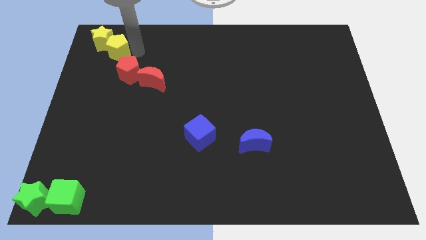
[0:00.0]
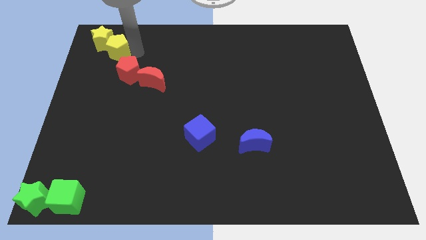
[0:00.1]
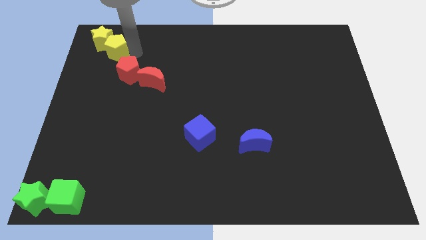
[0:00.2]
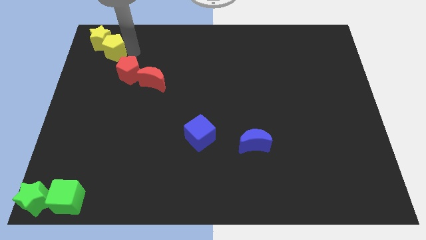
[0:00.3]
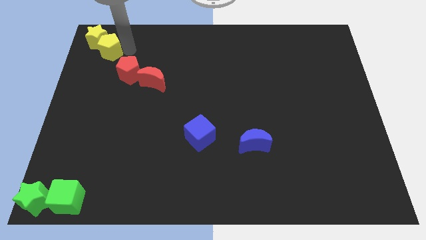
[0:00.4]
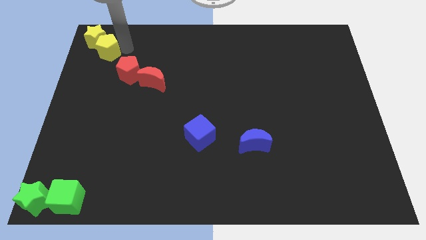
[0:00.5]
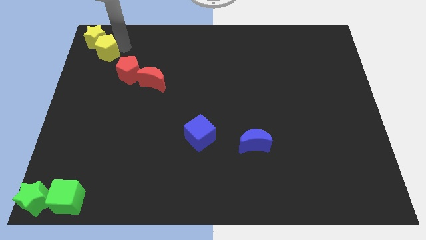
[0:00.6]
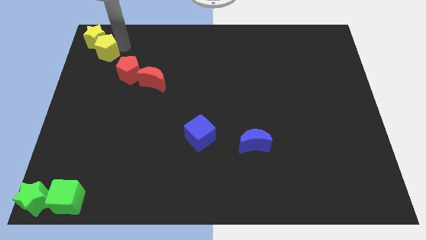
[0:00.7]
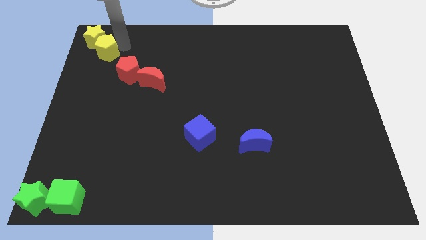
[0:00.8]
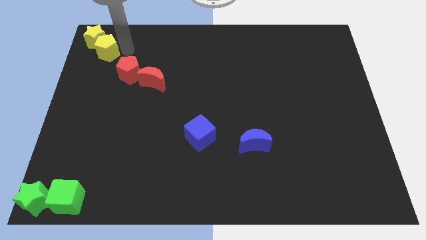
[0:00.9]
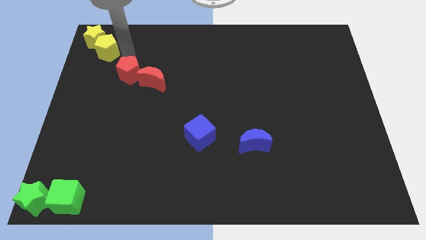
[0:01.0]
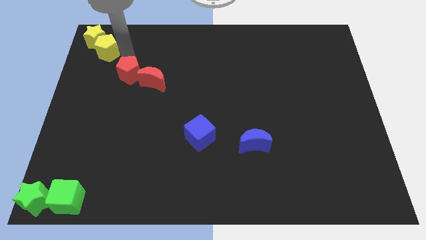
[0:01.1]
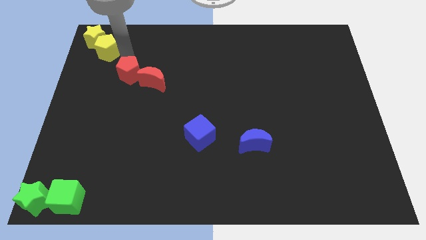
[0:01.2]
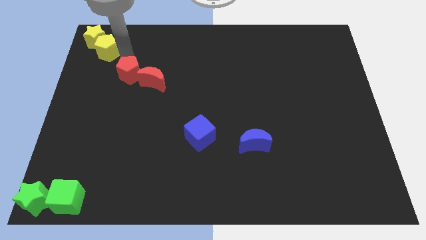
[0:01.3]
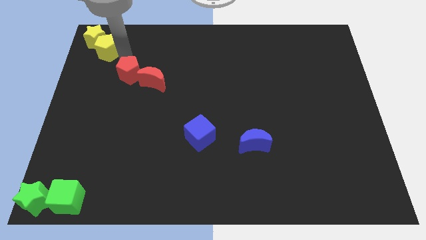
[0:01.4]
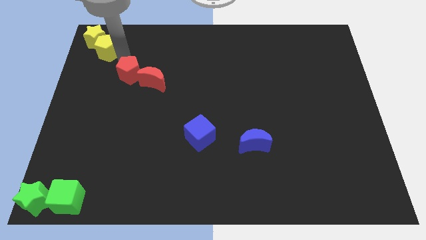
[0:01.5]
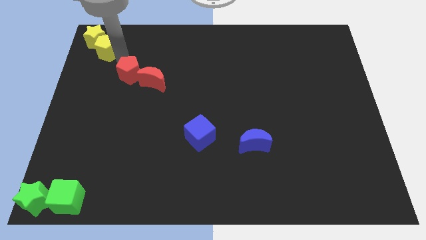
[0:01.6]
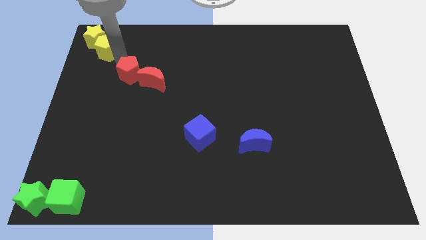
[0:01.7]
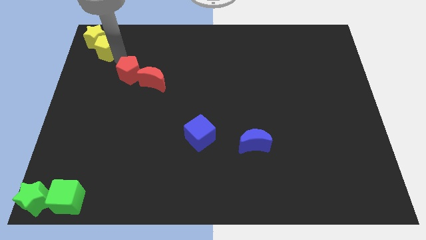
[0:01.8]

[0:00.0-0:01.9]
push the yellow star and pentagon towards the top left corner of the board

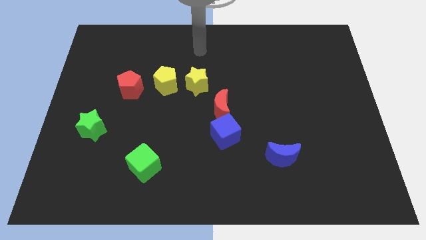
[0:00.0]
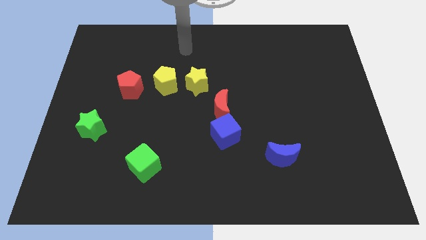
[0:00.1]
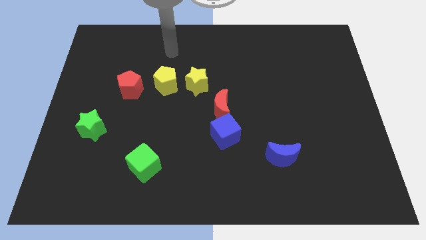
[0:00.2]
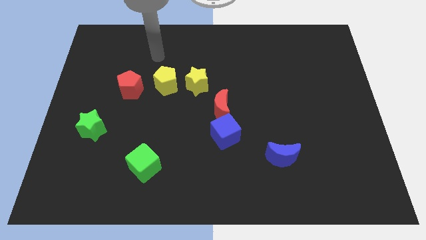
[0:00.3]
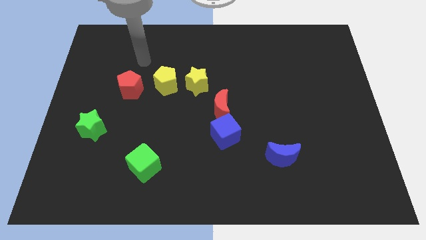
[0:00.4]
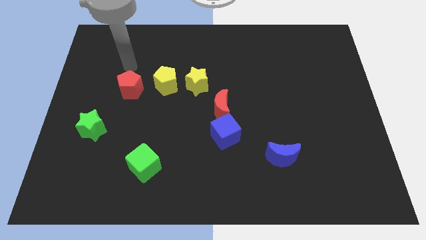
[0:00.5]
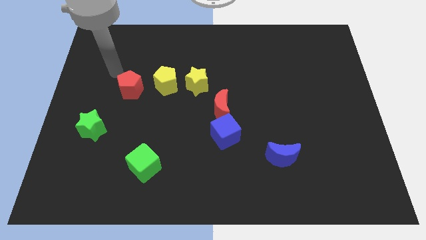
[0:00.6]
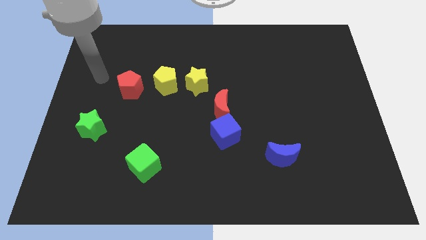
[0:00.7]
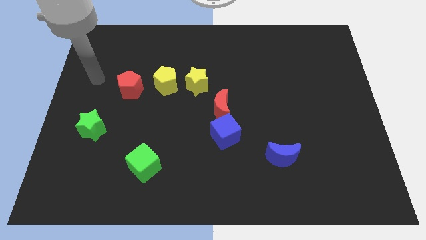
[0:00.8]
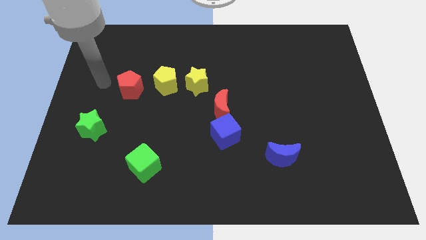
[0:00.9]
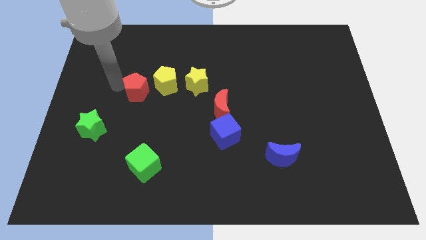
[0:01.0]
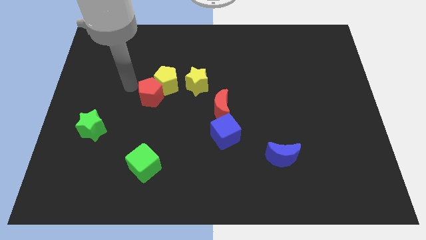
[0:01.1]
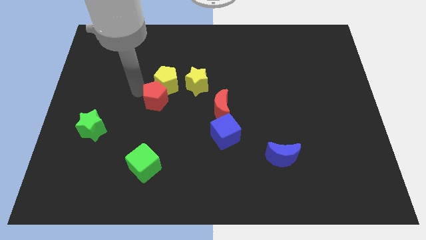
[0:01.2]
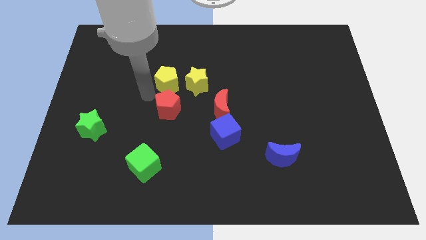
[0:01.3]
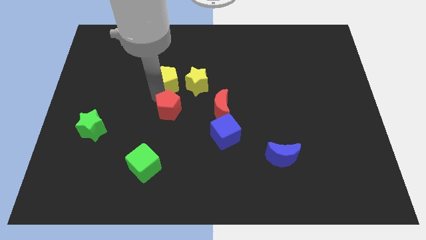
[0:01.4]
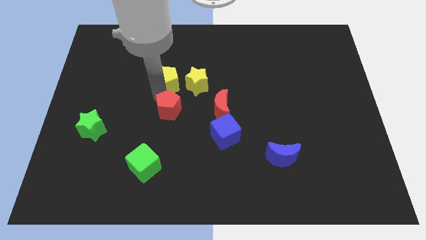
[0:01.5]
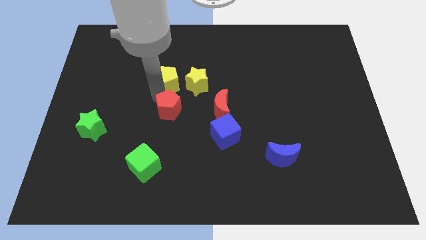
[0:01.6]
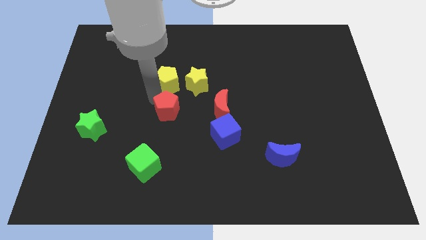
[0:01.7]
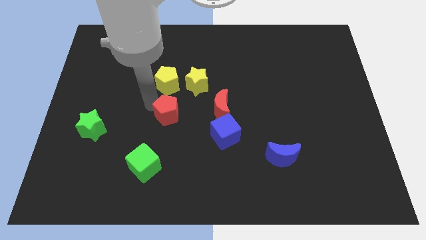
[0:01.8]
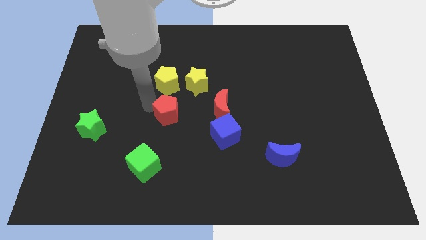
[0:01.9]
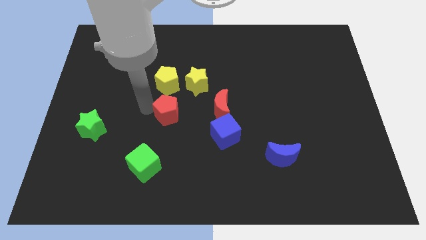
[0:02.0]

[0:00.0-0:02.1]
place the red pentagon below yellow pentagon

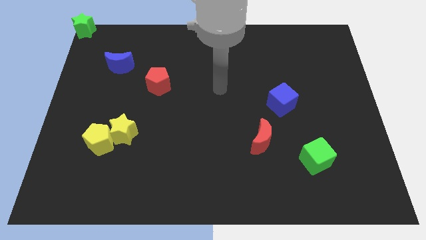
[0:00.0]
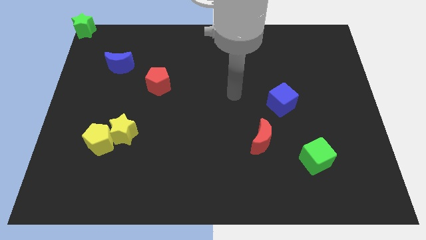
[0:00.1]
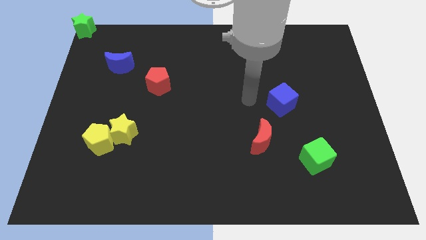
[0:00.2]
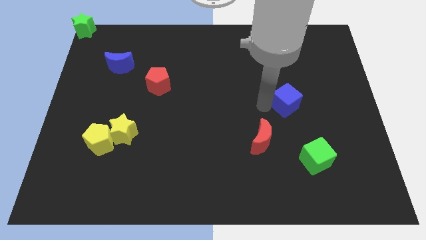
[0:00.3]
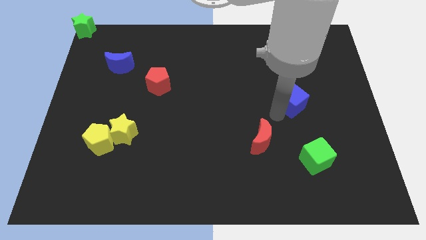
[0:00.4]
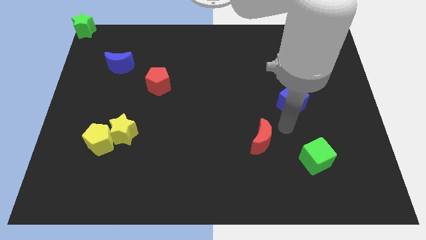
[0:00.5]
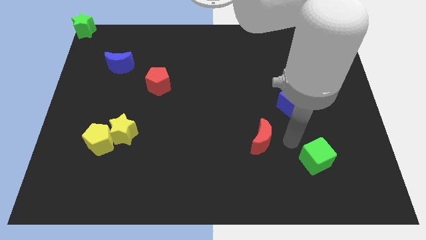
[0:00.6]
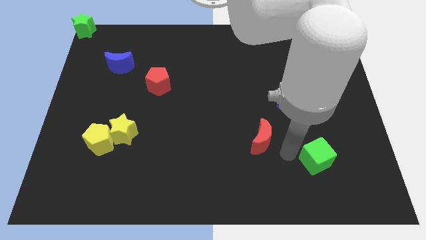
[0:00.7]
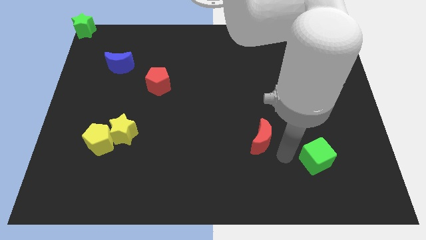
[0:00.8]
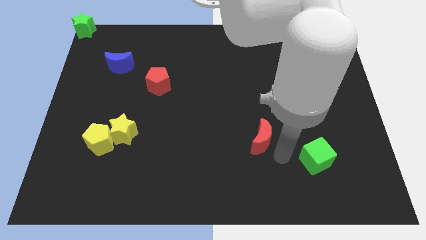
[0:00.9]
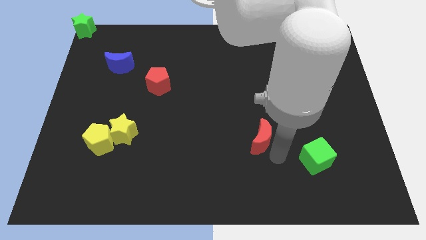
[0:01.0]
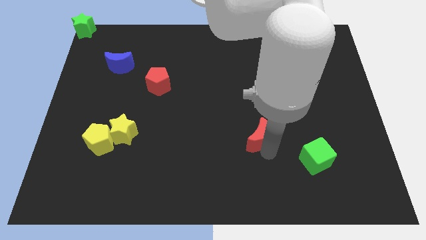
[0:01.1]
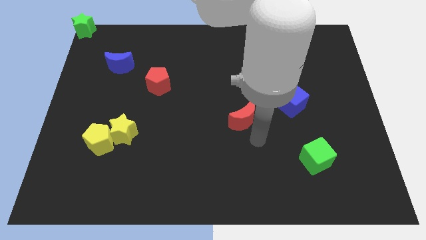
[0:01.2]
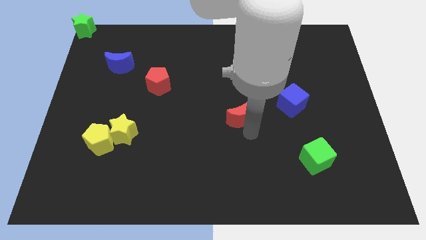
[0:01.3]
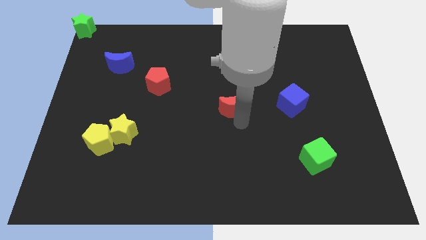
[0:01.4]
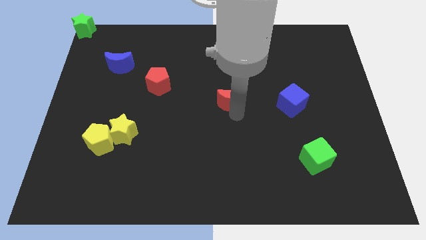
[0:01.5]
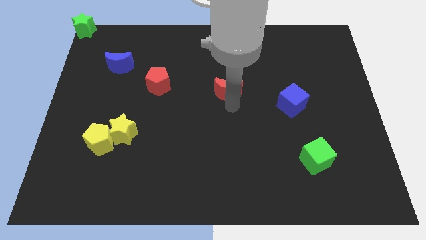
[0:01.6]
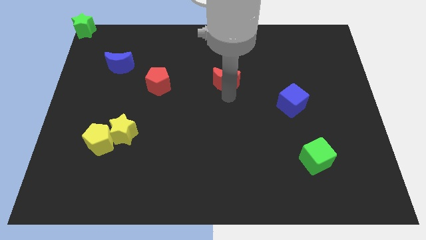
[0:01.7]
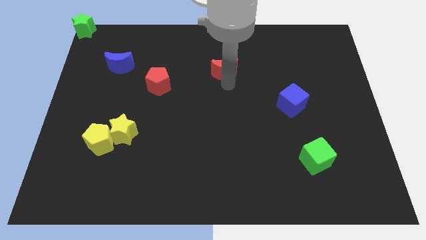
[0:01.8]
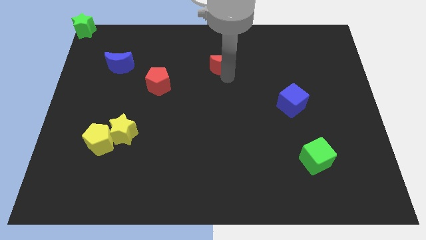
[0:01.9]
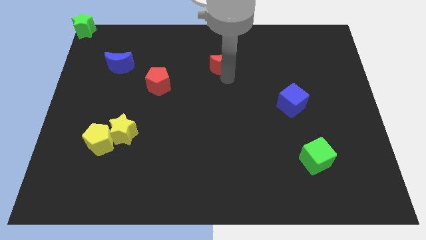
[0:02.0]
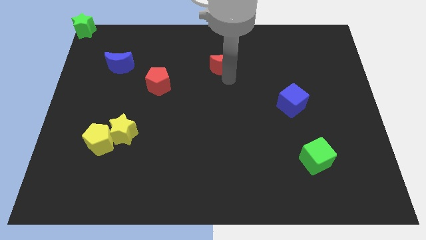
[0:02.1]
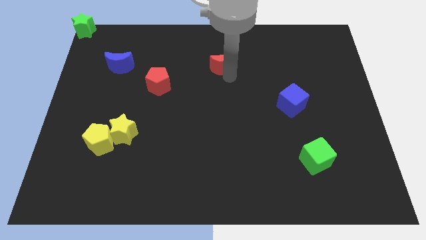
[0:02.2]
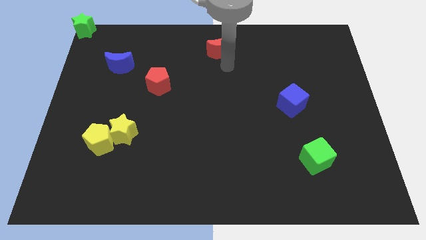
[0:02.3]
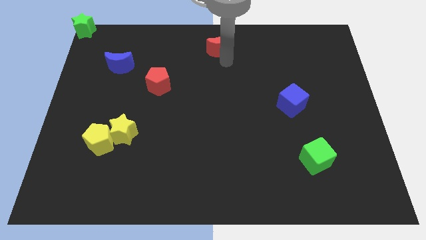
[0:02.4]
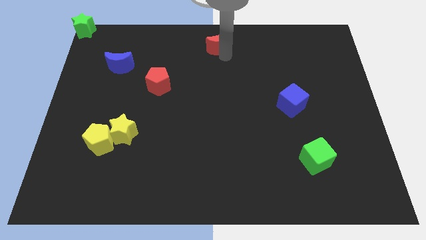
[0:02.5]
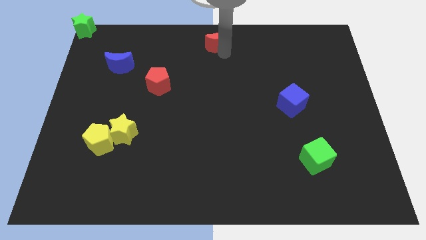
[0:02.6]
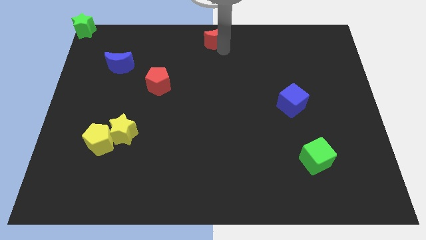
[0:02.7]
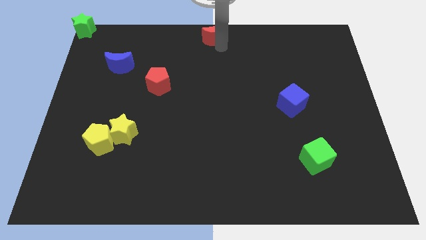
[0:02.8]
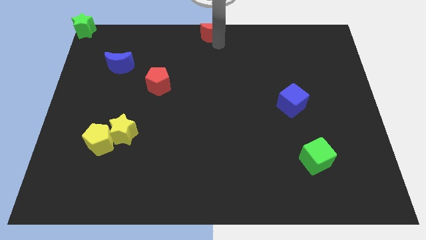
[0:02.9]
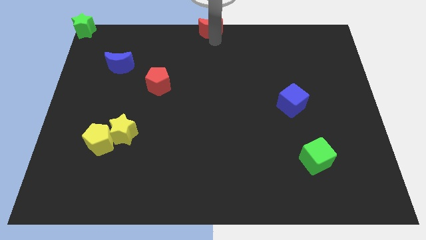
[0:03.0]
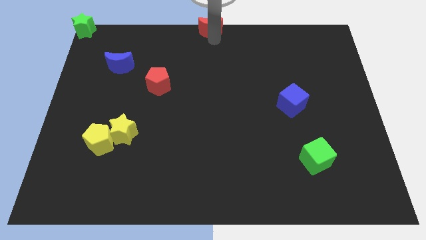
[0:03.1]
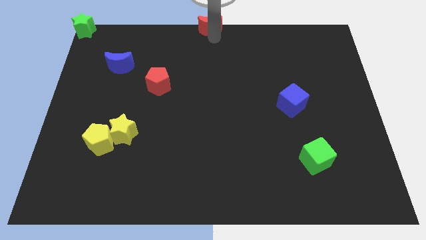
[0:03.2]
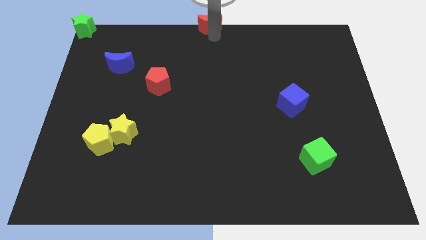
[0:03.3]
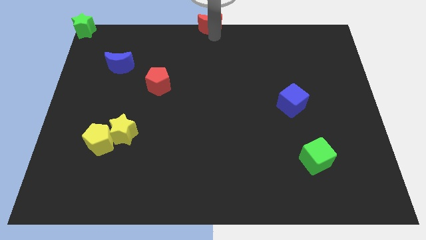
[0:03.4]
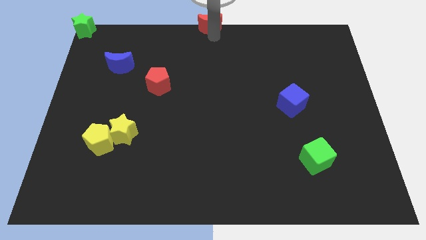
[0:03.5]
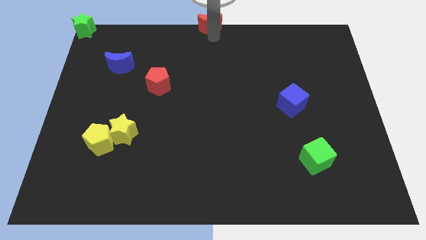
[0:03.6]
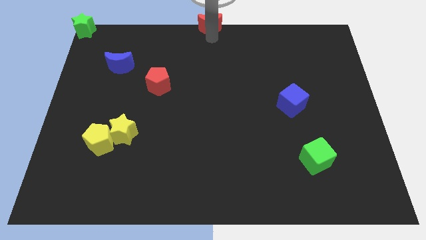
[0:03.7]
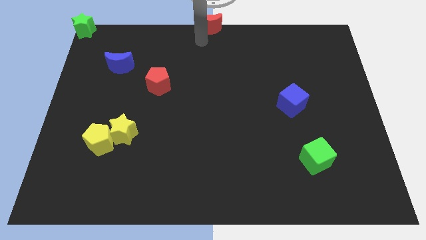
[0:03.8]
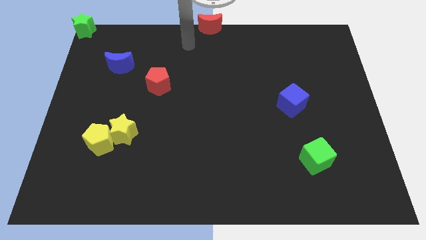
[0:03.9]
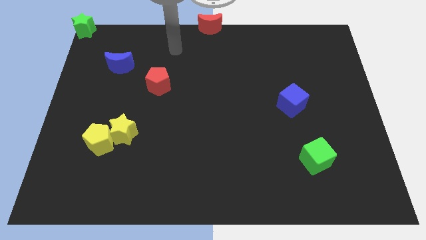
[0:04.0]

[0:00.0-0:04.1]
move red moon top center of the board

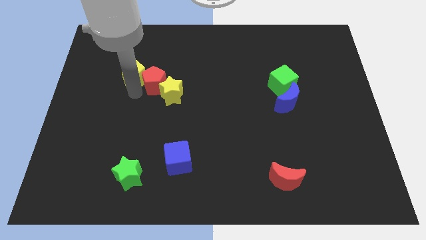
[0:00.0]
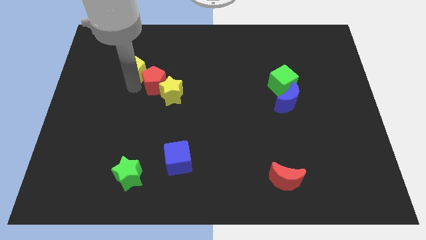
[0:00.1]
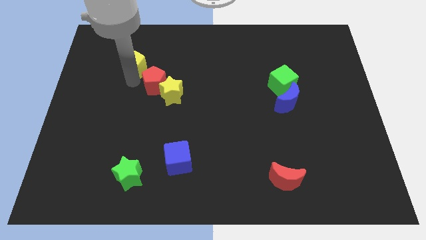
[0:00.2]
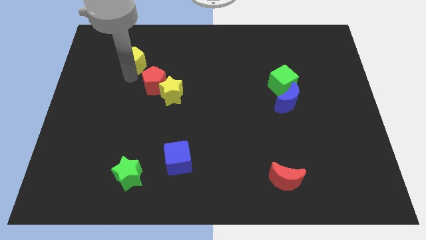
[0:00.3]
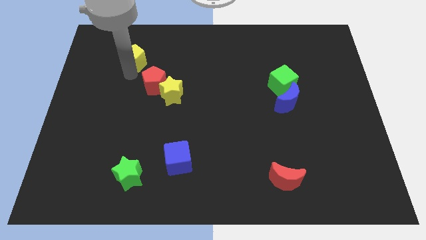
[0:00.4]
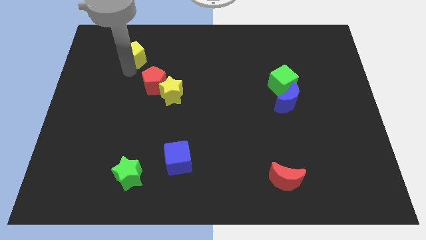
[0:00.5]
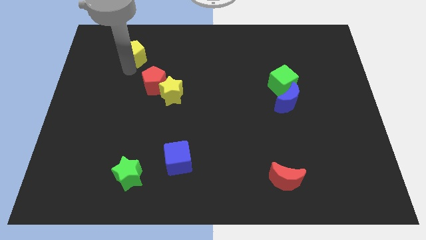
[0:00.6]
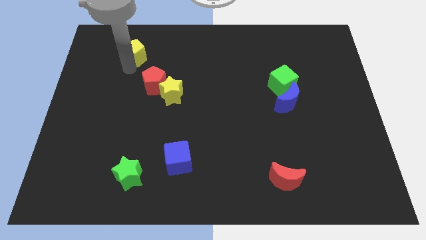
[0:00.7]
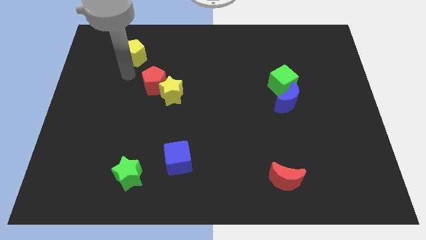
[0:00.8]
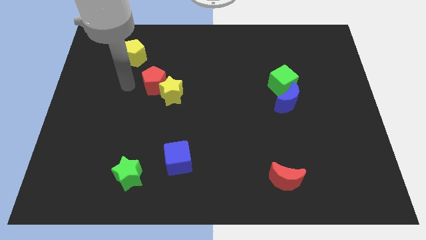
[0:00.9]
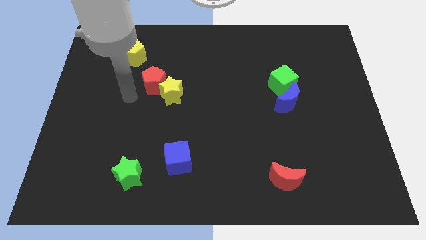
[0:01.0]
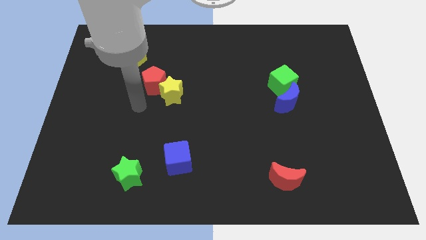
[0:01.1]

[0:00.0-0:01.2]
push the yellow pentagon slightly to the top side of the board
